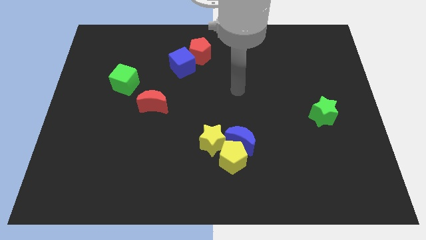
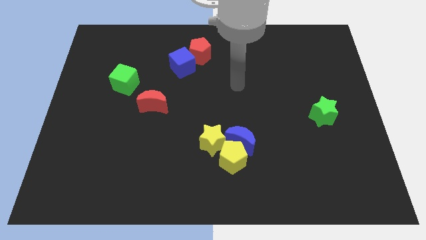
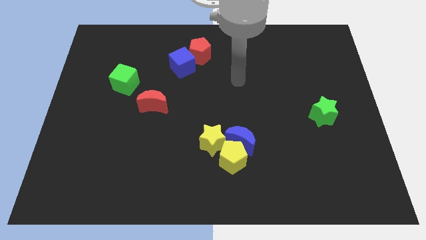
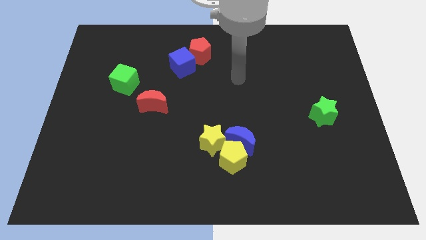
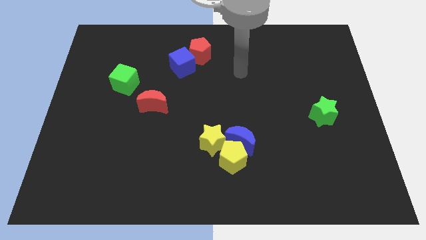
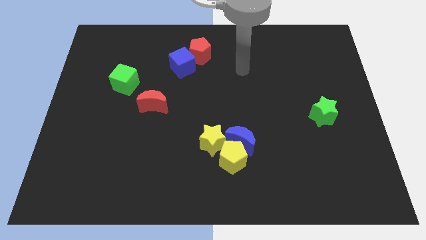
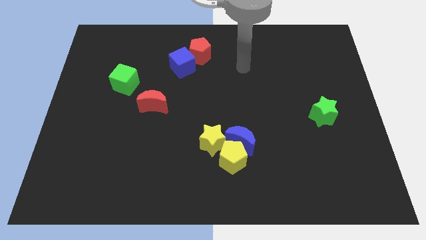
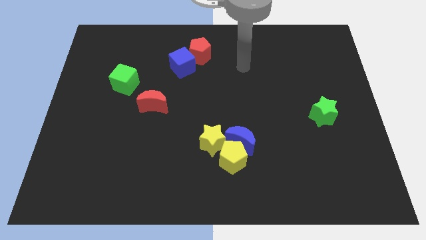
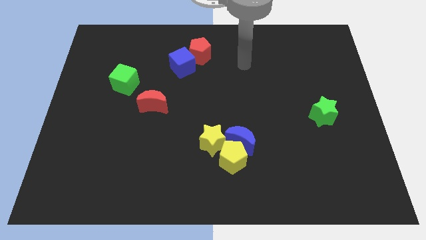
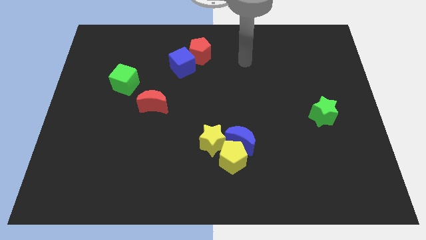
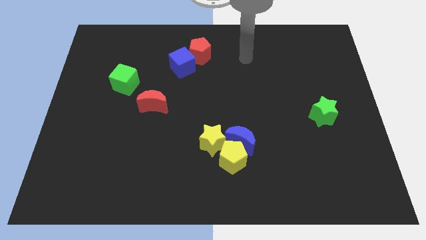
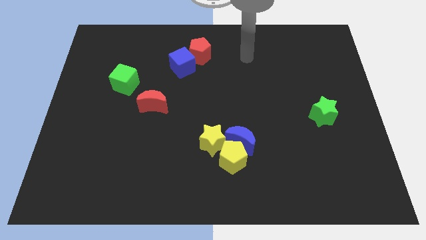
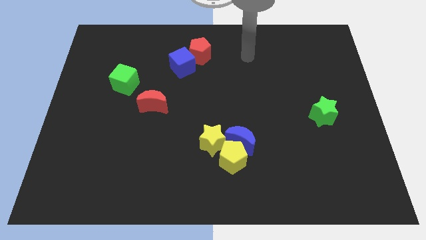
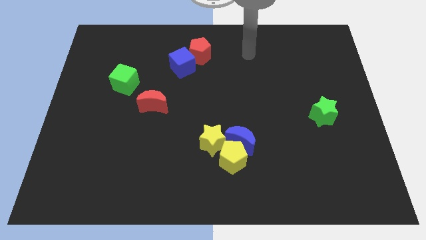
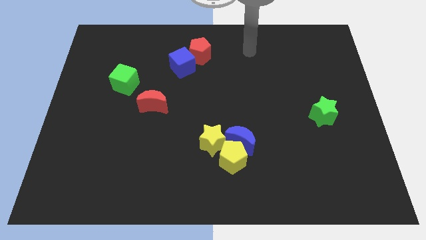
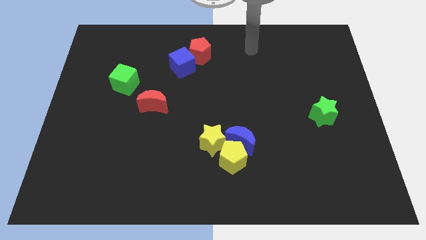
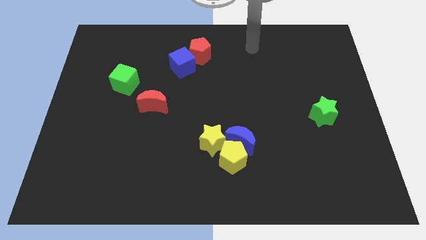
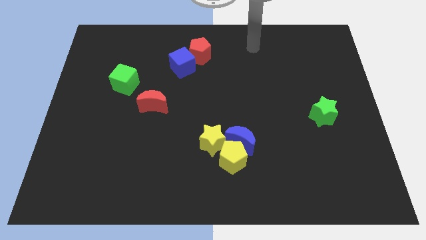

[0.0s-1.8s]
point the arm to the right of the red pentagon

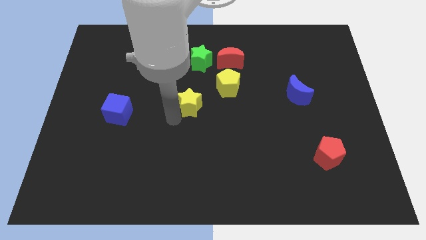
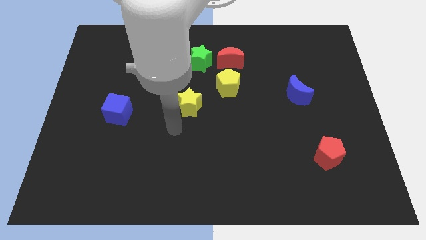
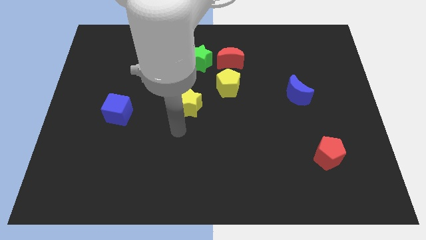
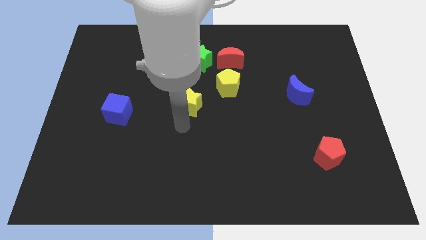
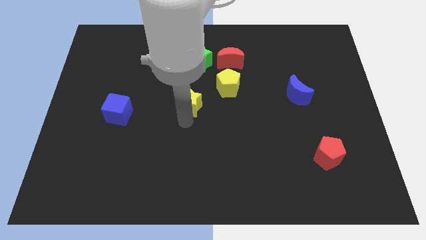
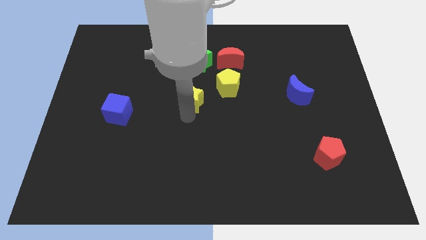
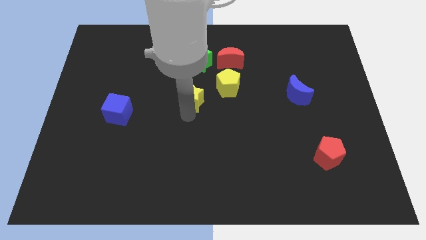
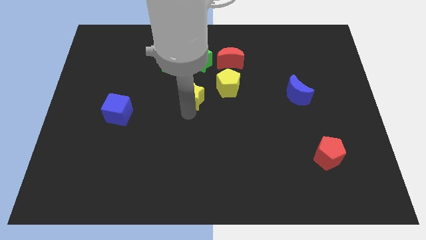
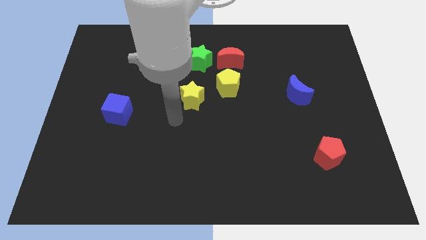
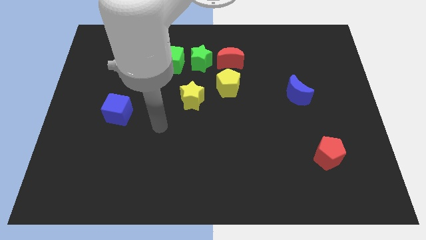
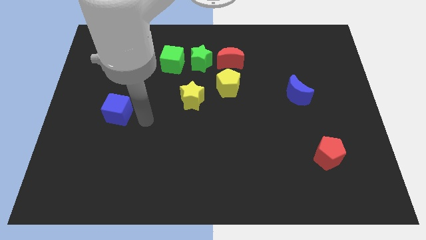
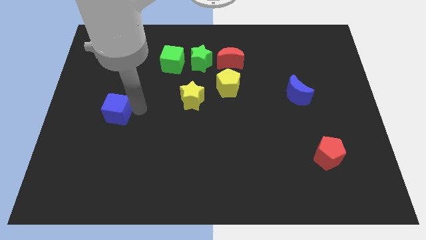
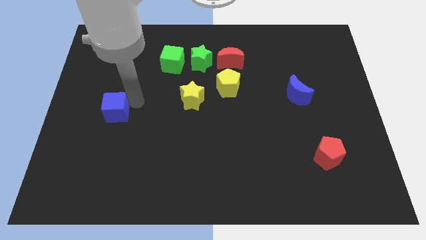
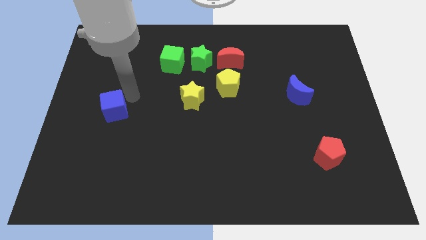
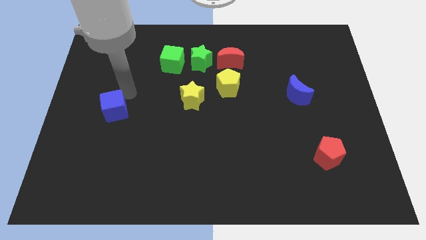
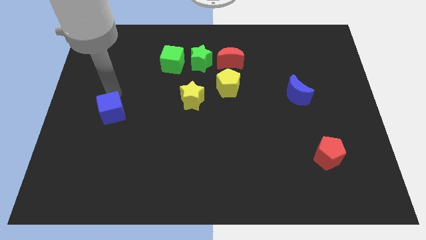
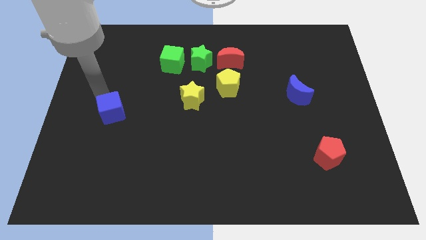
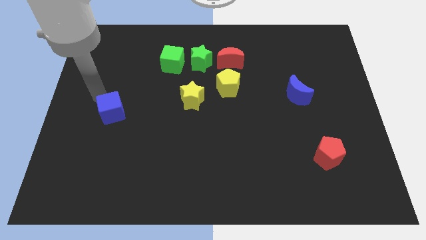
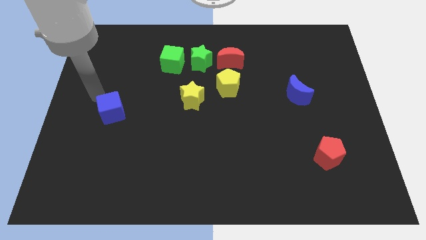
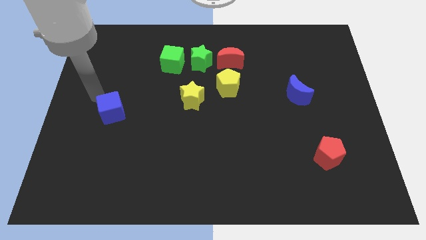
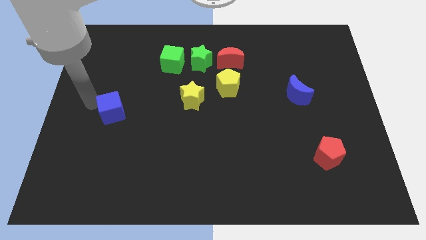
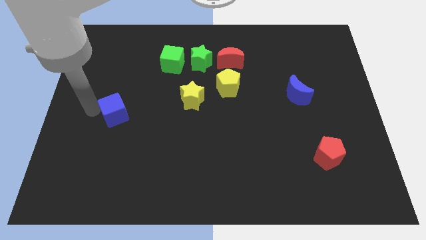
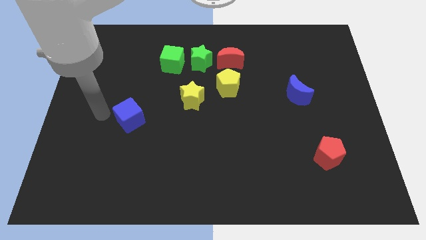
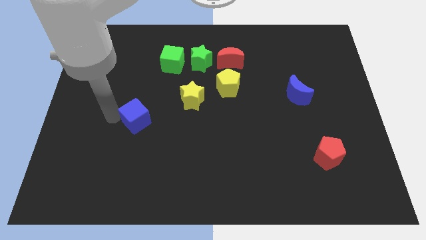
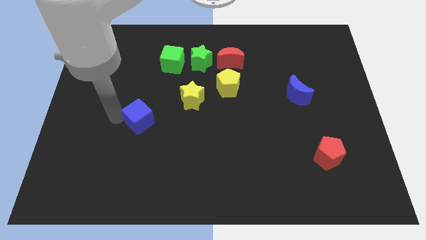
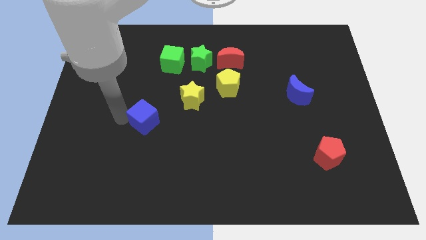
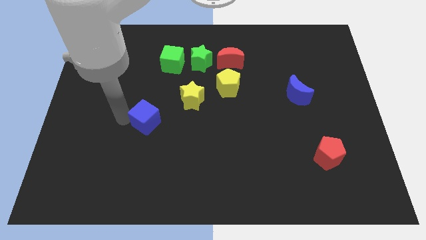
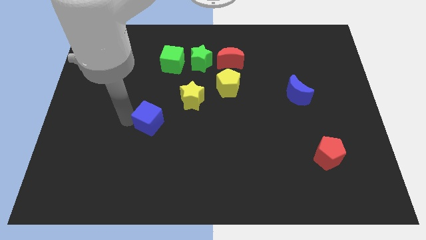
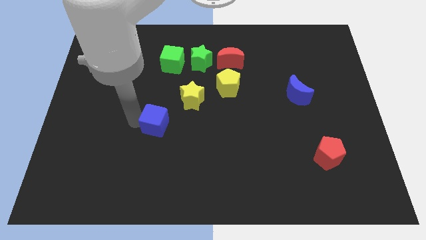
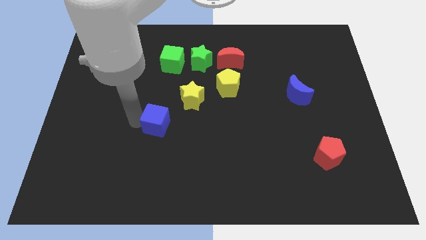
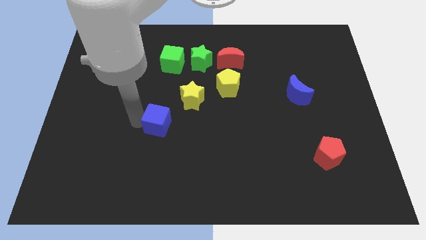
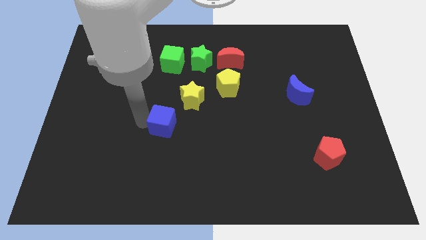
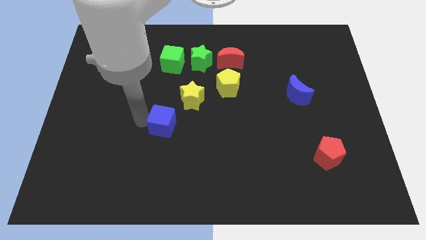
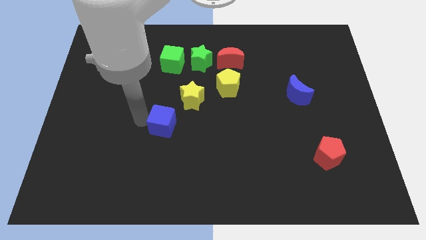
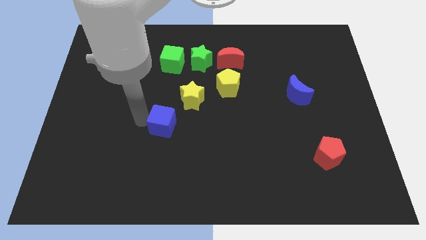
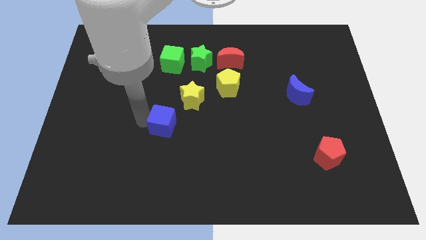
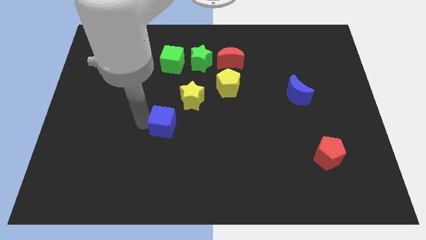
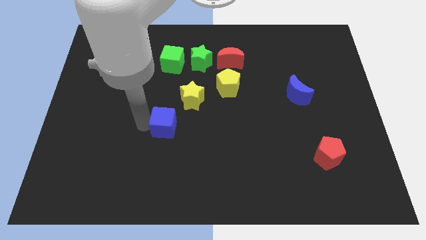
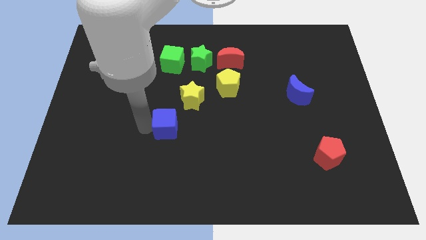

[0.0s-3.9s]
move blue cube to the bottom left of blue cube

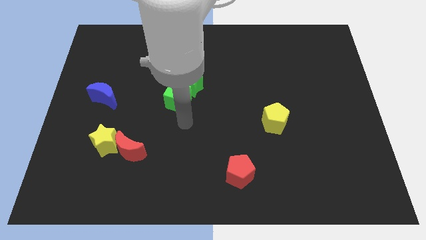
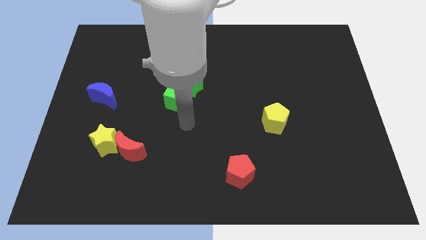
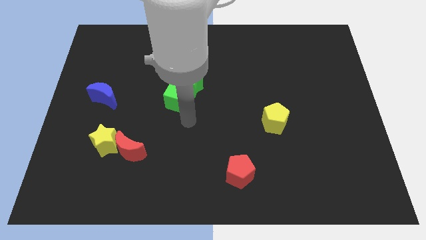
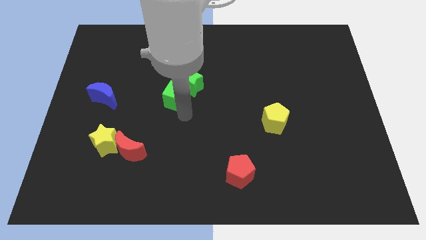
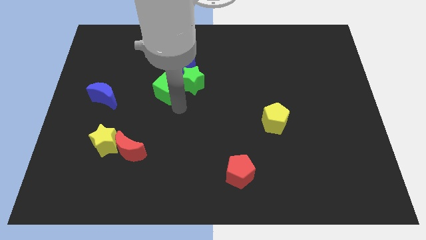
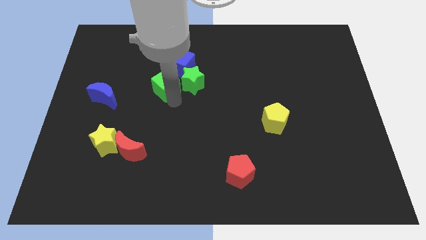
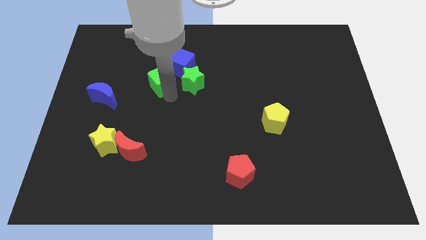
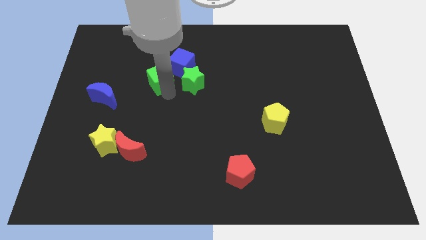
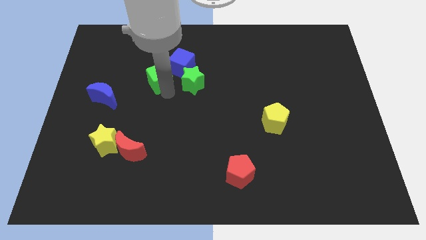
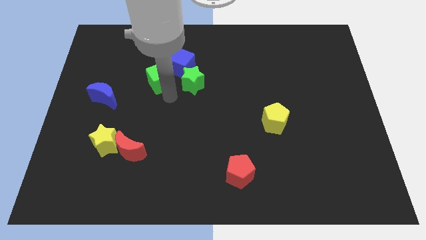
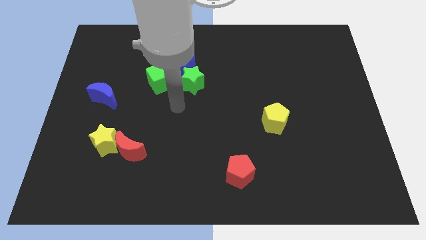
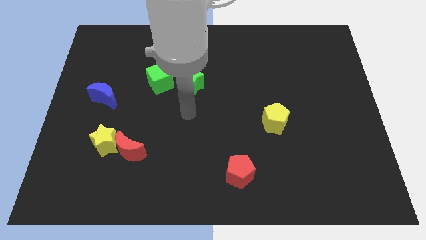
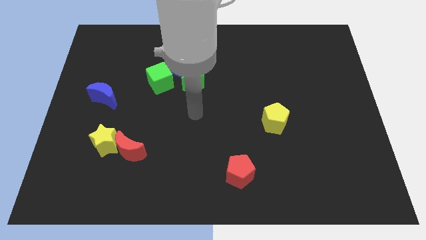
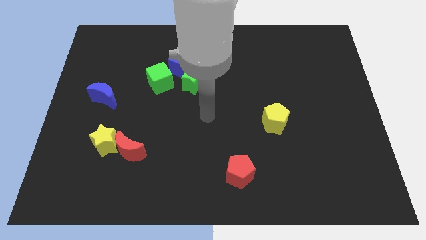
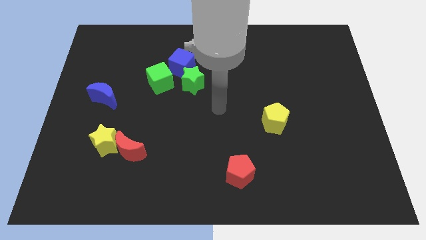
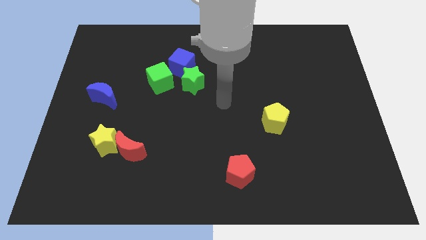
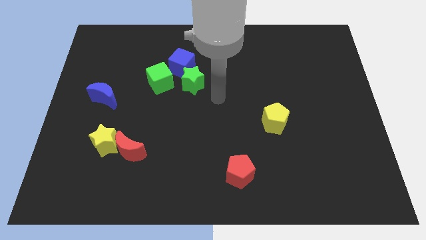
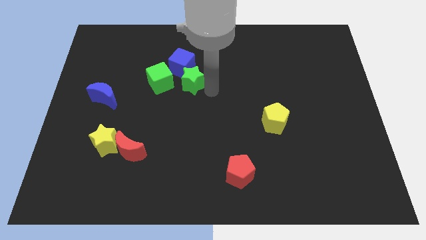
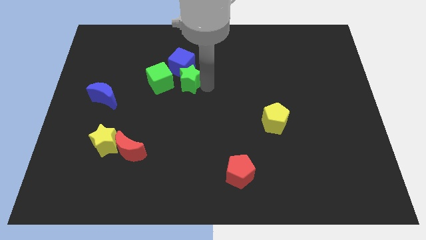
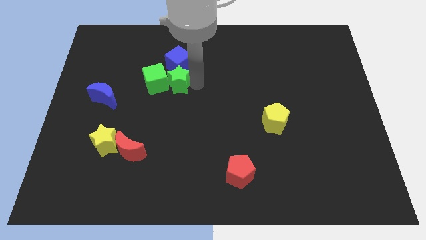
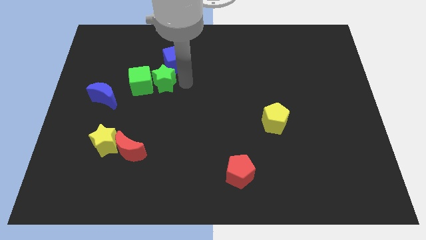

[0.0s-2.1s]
place the arm on the right side of the green star

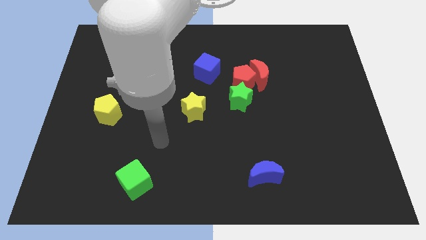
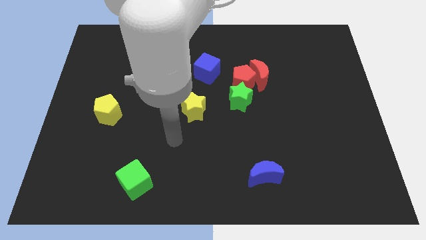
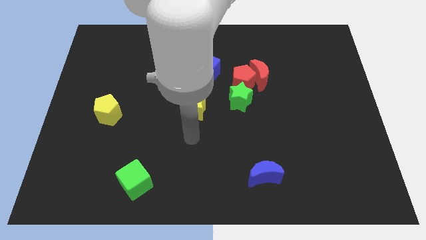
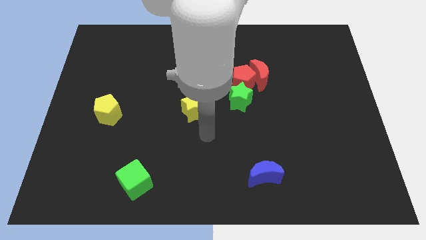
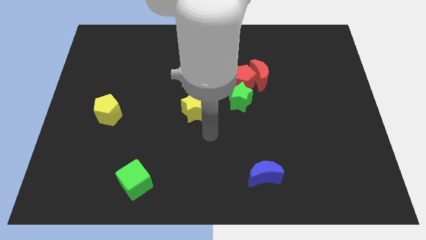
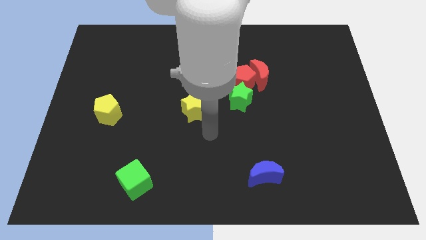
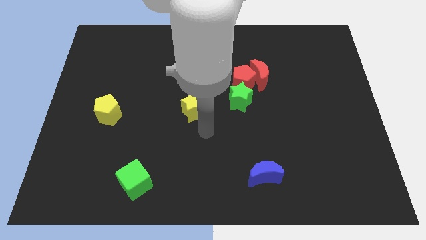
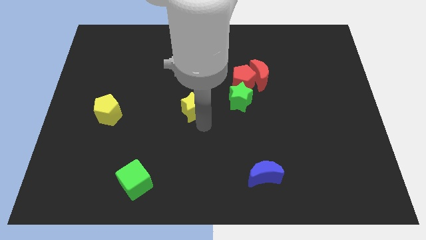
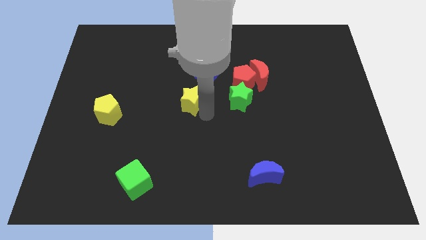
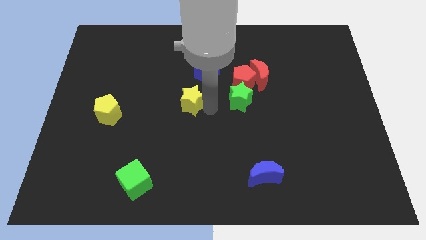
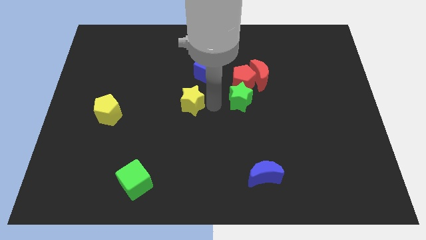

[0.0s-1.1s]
push the yellow star slightly upwards

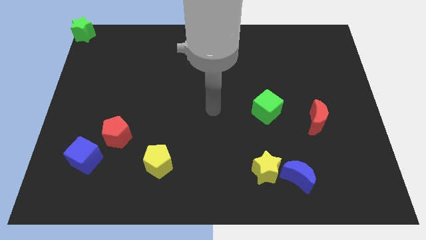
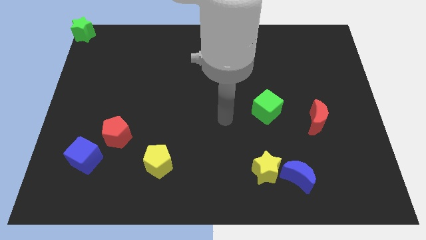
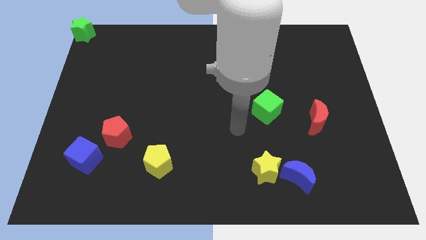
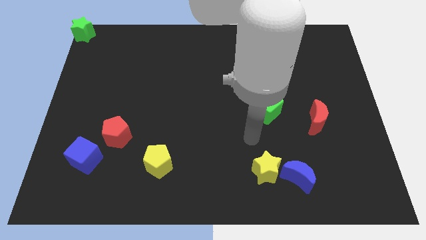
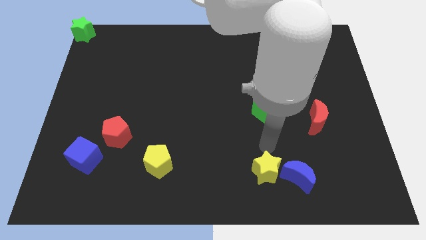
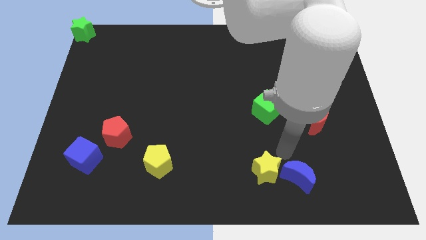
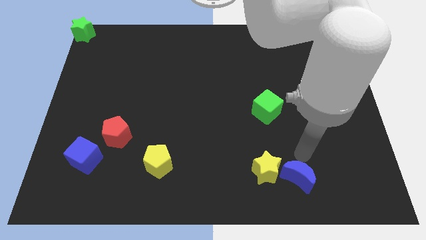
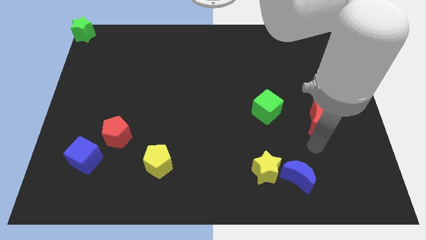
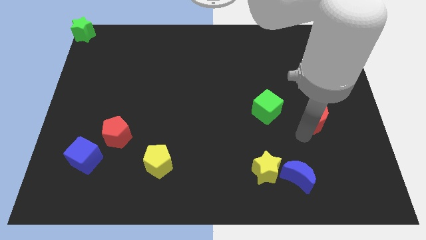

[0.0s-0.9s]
place your arm below red moon
